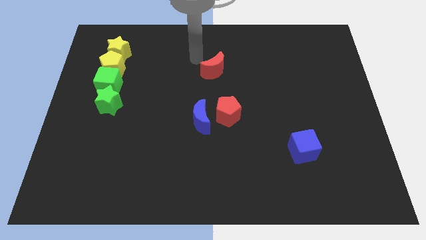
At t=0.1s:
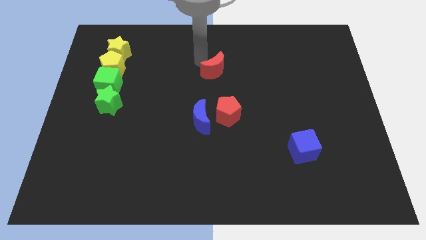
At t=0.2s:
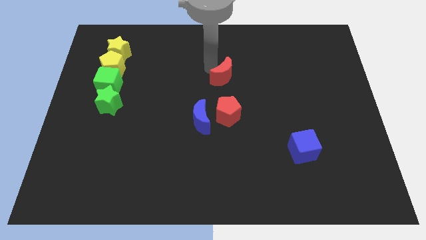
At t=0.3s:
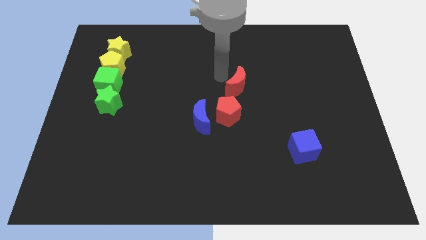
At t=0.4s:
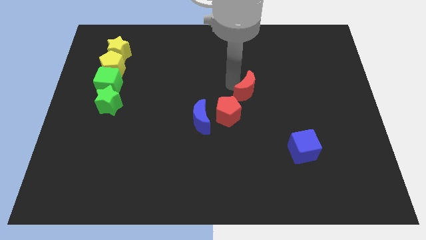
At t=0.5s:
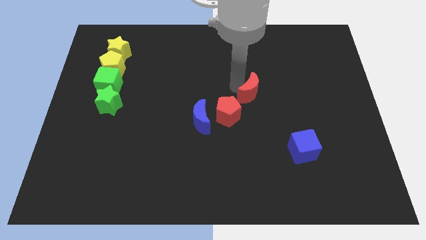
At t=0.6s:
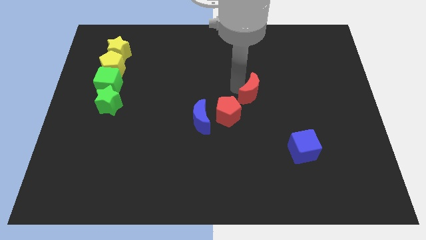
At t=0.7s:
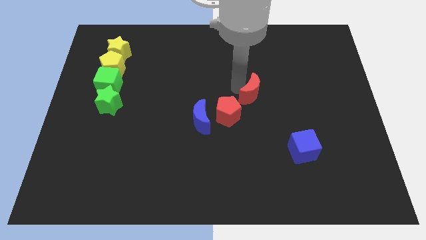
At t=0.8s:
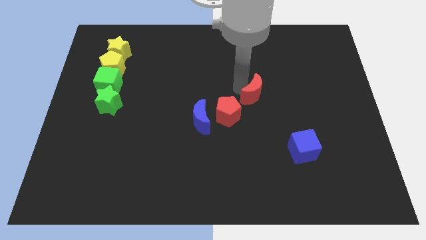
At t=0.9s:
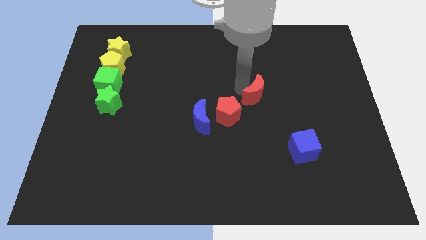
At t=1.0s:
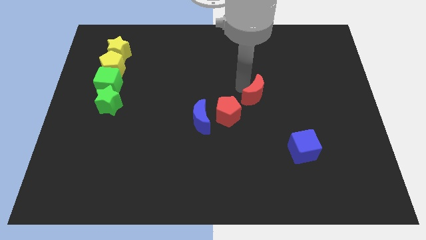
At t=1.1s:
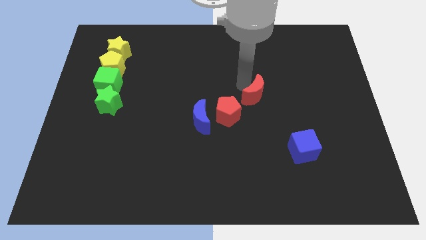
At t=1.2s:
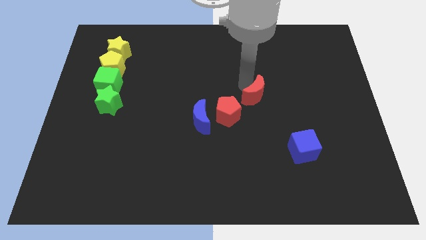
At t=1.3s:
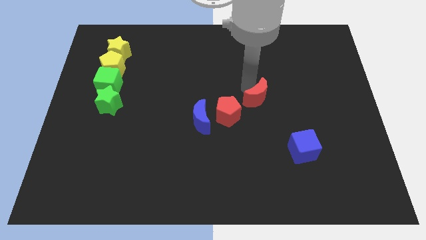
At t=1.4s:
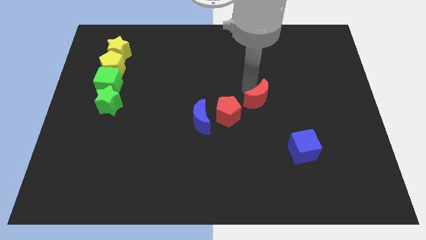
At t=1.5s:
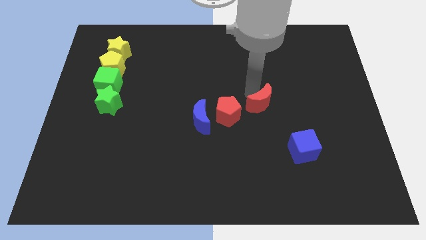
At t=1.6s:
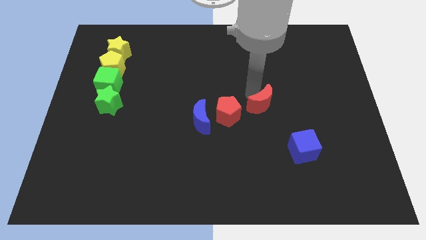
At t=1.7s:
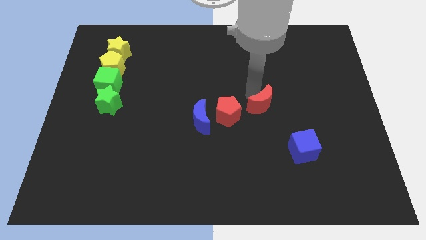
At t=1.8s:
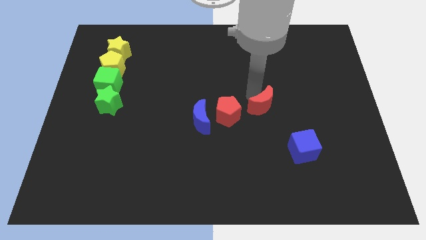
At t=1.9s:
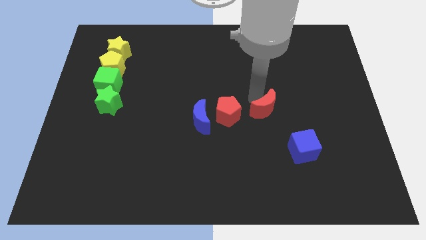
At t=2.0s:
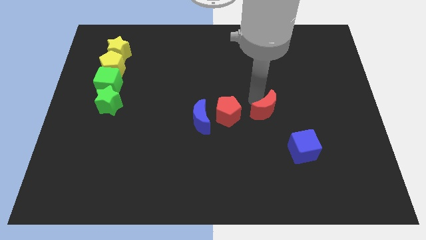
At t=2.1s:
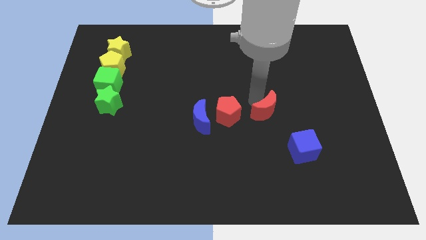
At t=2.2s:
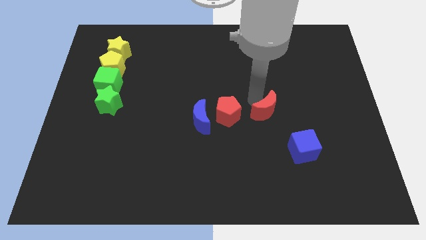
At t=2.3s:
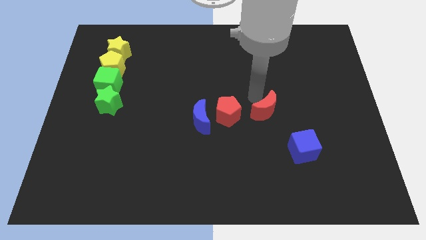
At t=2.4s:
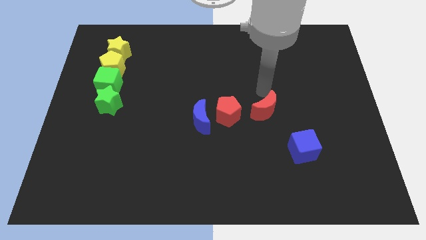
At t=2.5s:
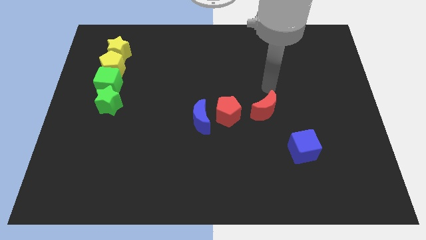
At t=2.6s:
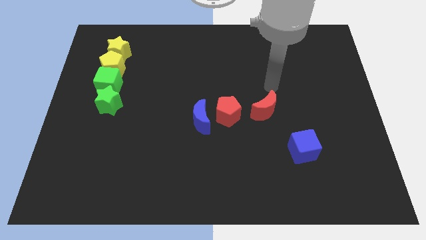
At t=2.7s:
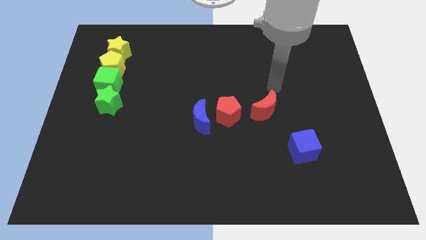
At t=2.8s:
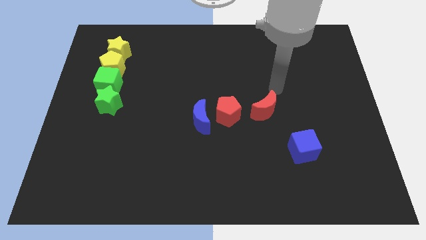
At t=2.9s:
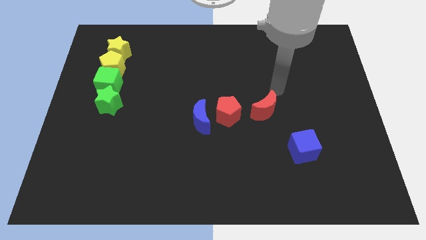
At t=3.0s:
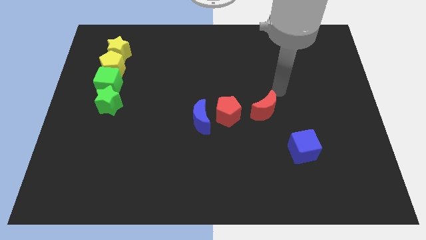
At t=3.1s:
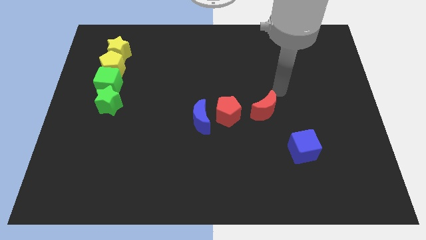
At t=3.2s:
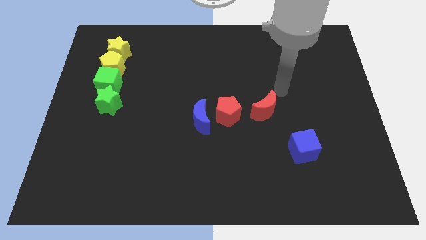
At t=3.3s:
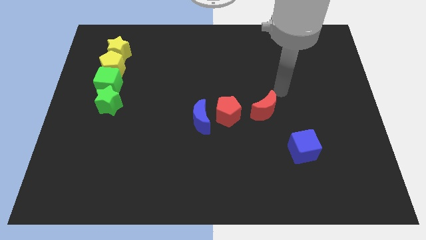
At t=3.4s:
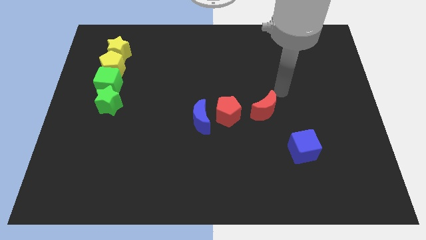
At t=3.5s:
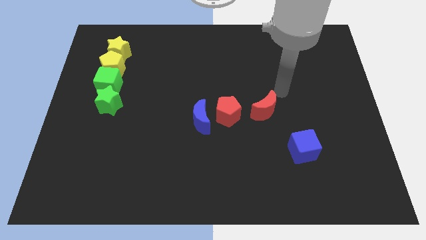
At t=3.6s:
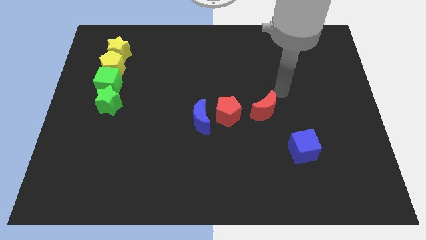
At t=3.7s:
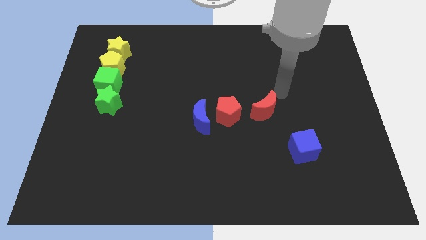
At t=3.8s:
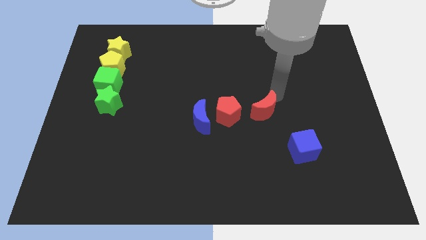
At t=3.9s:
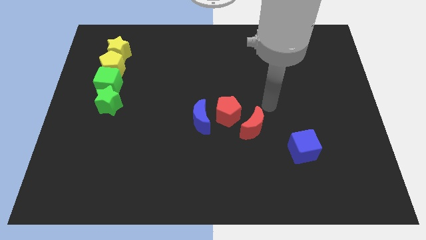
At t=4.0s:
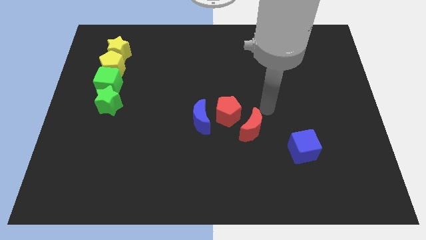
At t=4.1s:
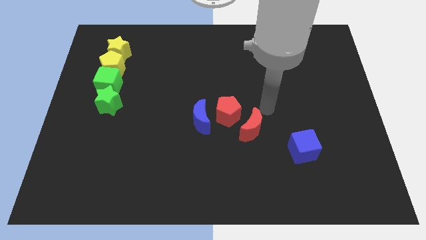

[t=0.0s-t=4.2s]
push the red crescent to the bottom right of the red pentagon

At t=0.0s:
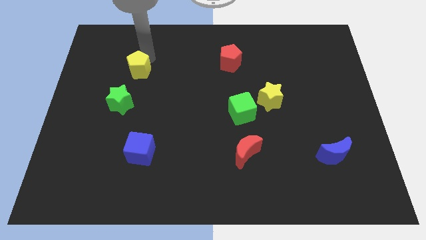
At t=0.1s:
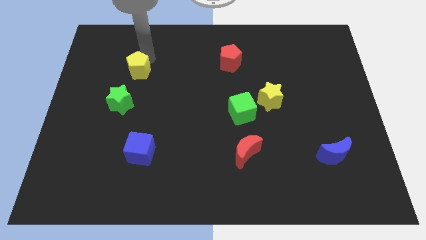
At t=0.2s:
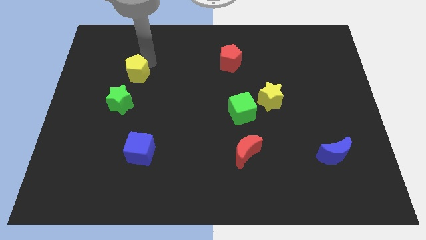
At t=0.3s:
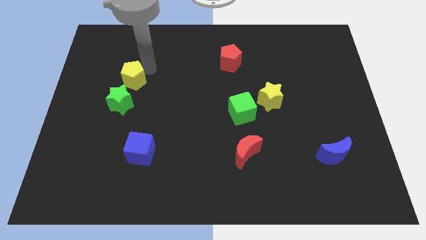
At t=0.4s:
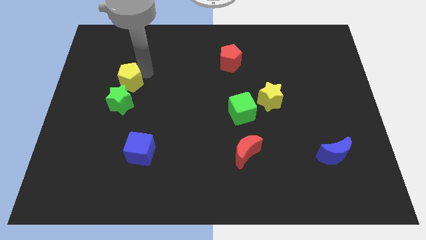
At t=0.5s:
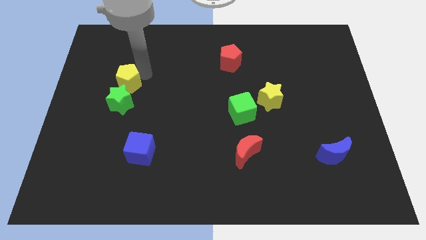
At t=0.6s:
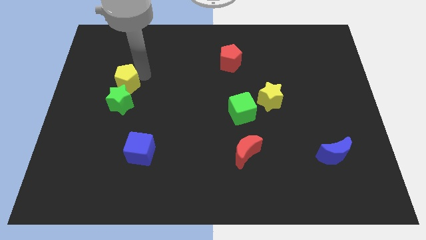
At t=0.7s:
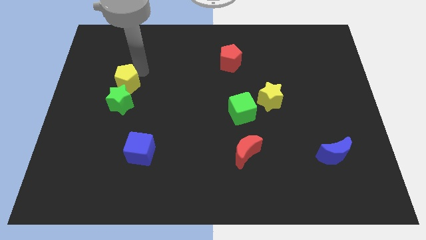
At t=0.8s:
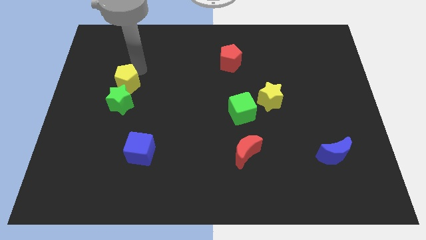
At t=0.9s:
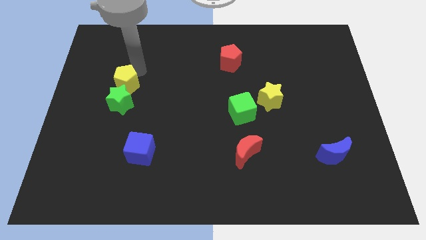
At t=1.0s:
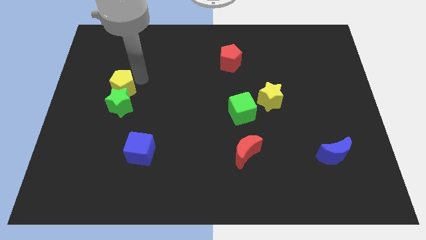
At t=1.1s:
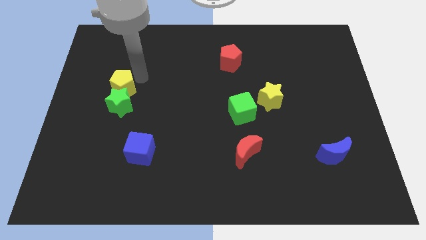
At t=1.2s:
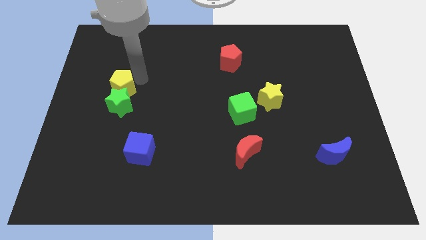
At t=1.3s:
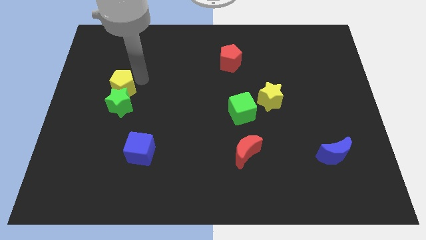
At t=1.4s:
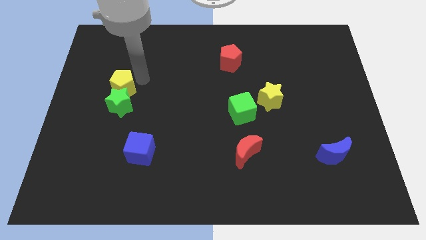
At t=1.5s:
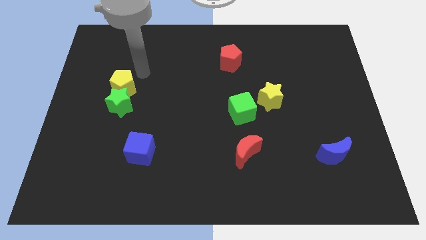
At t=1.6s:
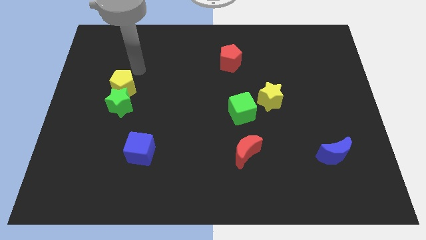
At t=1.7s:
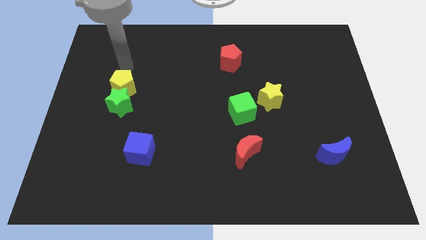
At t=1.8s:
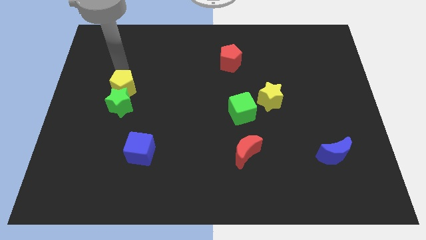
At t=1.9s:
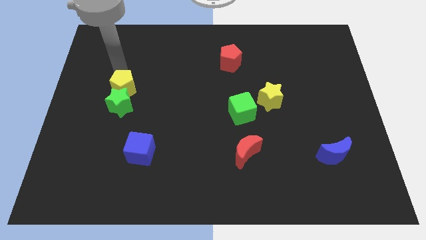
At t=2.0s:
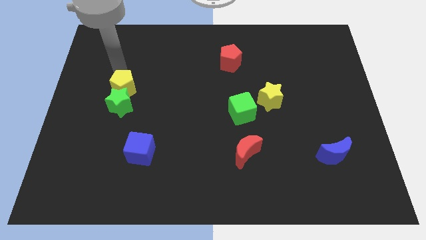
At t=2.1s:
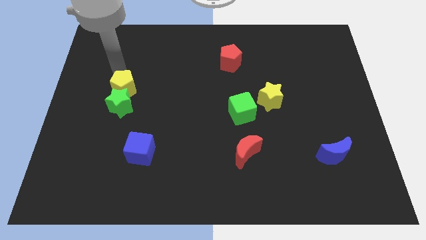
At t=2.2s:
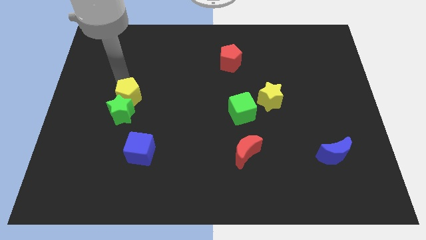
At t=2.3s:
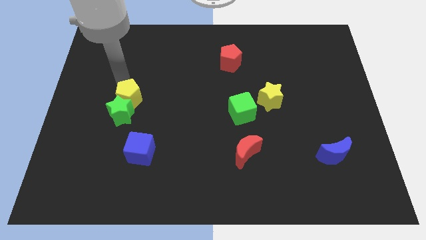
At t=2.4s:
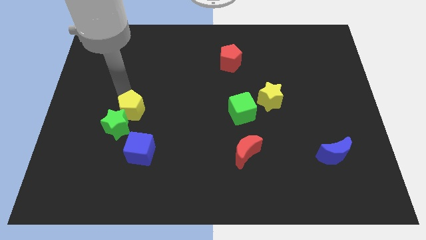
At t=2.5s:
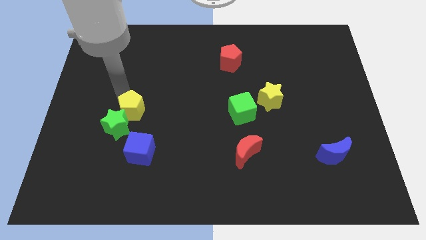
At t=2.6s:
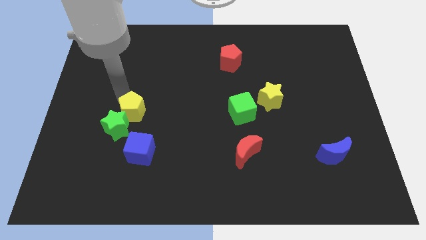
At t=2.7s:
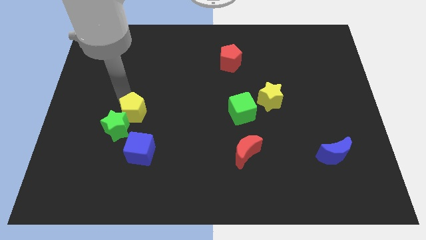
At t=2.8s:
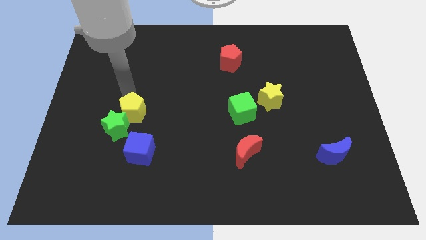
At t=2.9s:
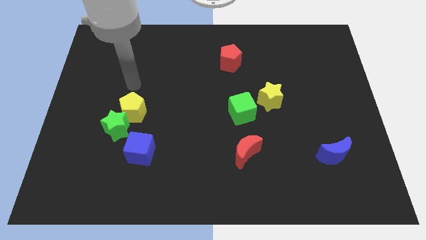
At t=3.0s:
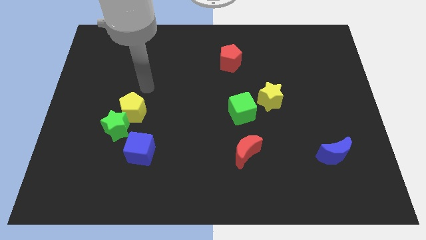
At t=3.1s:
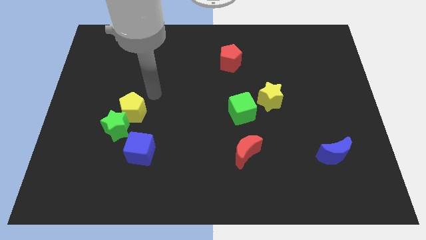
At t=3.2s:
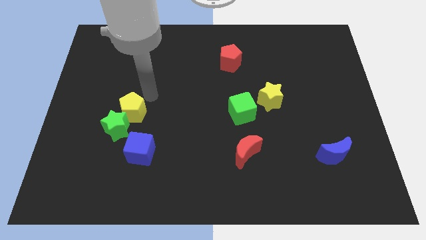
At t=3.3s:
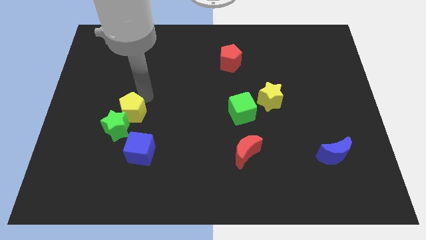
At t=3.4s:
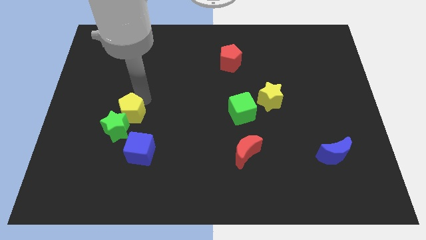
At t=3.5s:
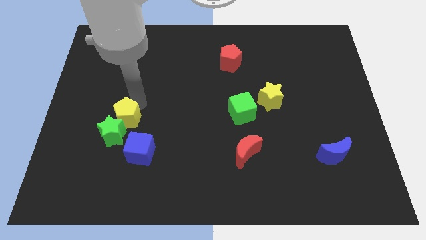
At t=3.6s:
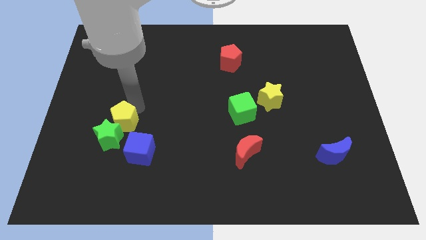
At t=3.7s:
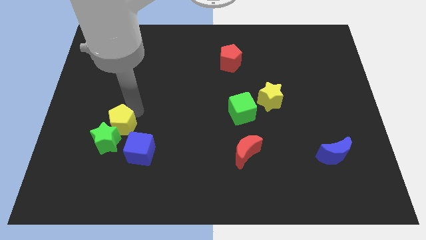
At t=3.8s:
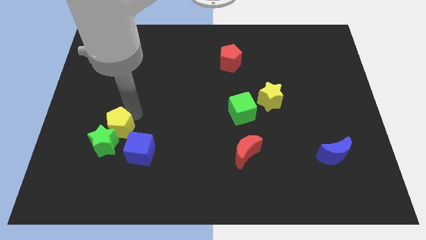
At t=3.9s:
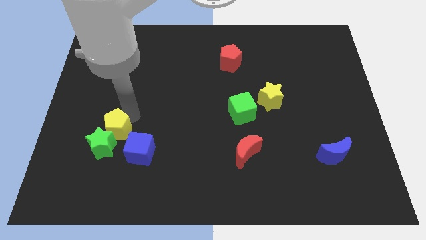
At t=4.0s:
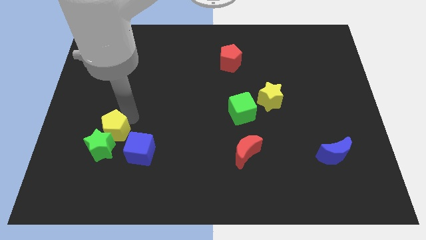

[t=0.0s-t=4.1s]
slide yellow pentagon and green star close to blue cube

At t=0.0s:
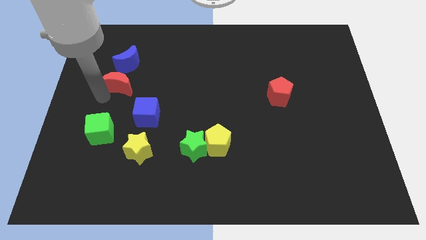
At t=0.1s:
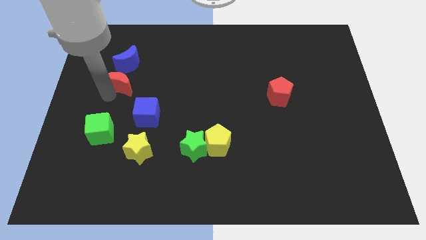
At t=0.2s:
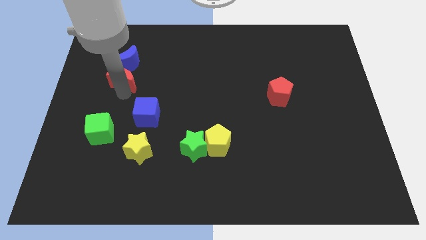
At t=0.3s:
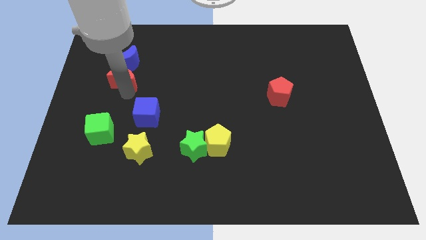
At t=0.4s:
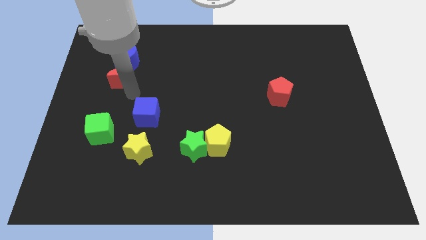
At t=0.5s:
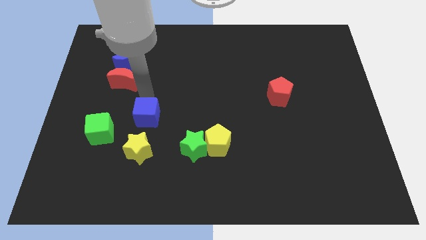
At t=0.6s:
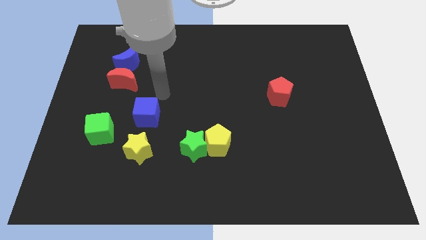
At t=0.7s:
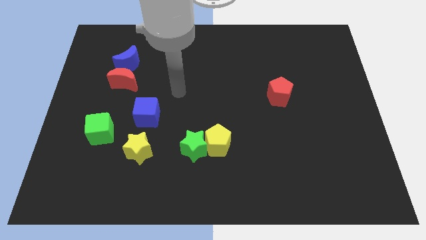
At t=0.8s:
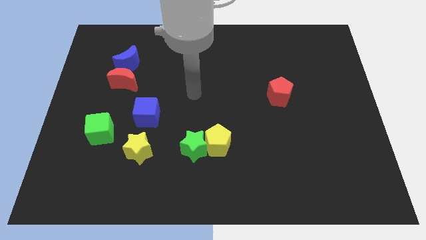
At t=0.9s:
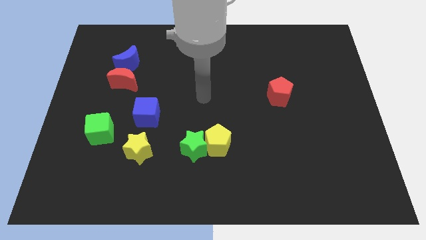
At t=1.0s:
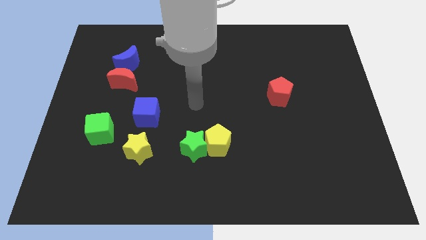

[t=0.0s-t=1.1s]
place your arm above green star
